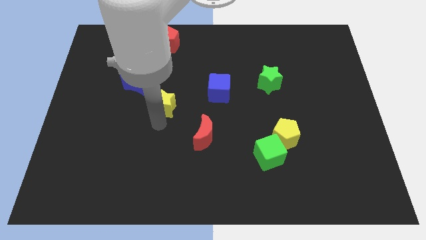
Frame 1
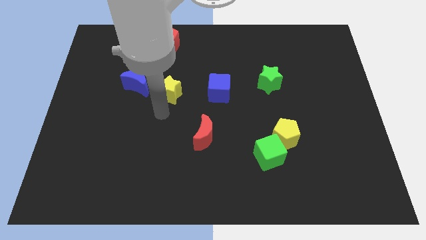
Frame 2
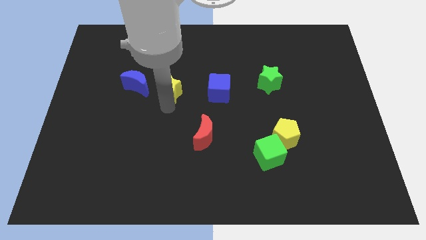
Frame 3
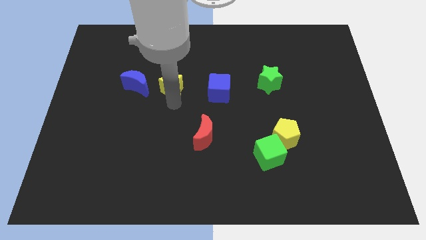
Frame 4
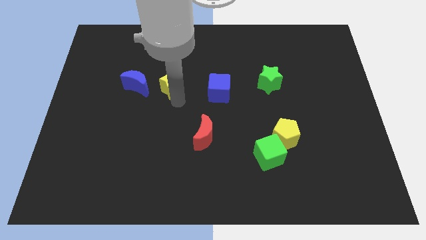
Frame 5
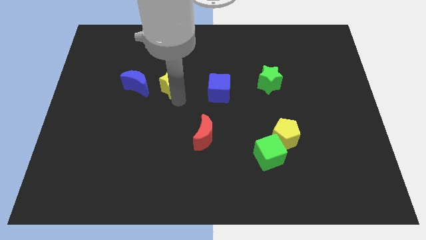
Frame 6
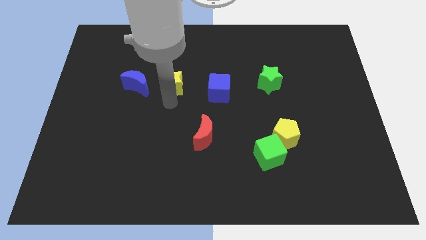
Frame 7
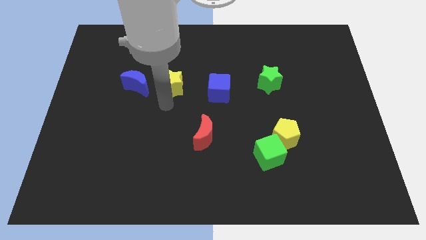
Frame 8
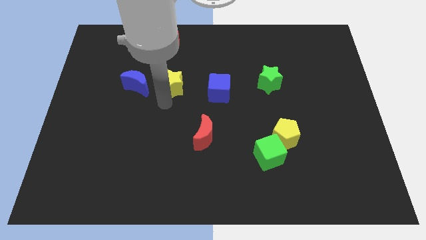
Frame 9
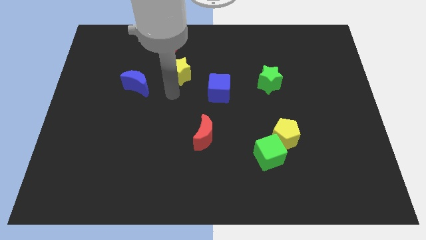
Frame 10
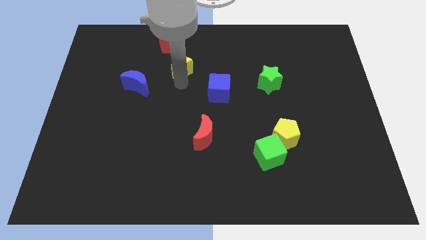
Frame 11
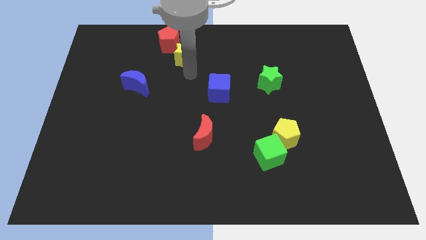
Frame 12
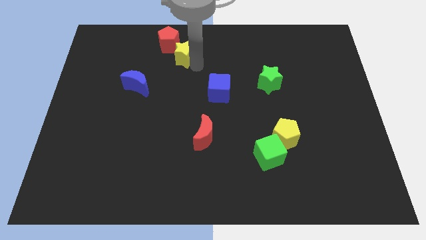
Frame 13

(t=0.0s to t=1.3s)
push the yellow star towards the red pentagon

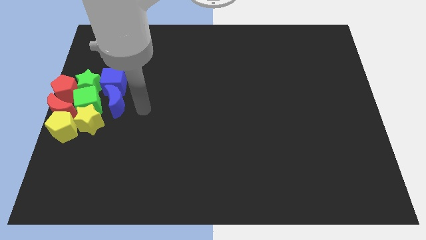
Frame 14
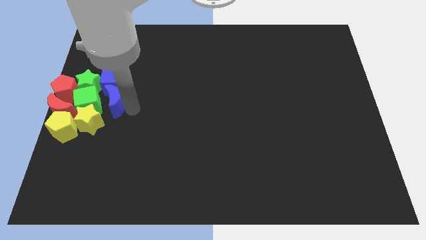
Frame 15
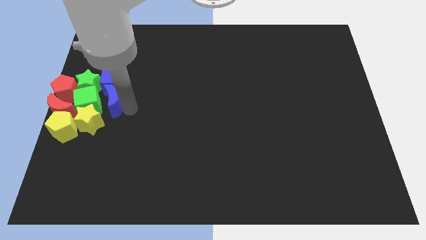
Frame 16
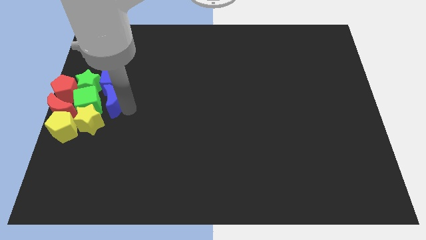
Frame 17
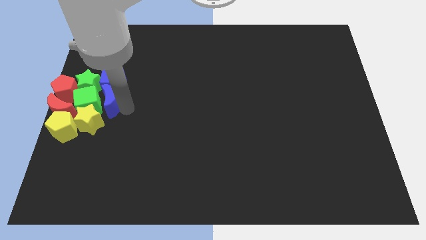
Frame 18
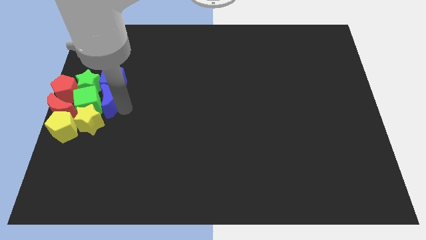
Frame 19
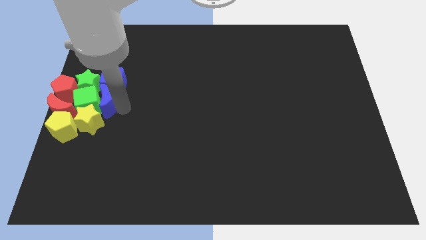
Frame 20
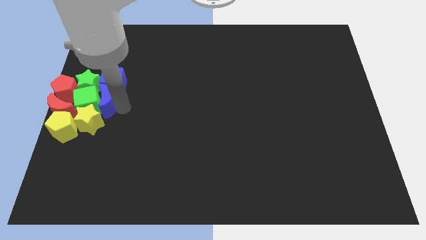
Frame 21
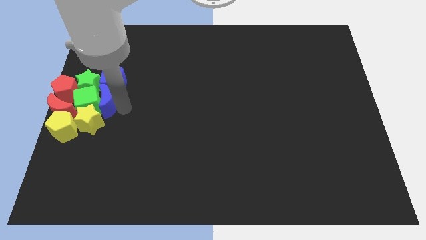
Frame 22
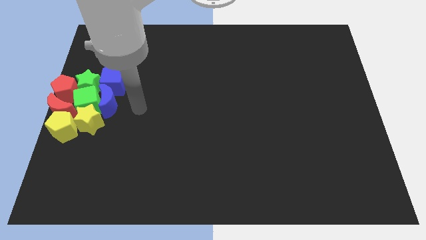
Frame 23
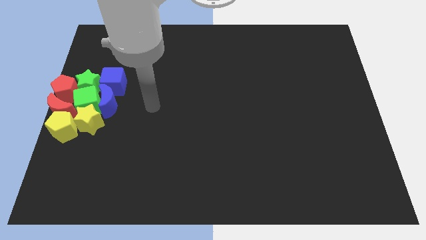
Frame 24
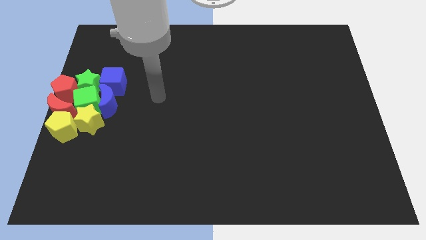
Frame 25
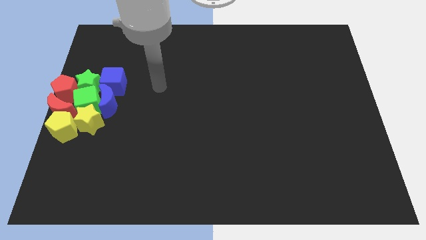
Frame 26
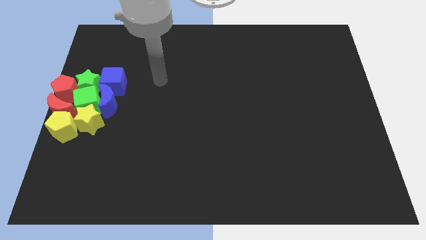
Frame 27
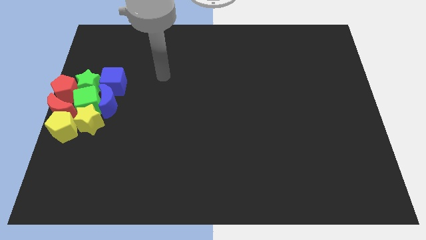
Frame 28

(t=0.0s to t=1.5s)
push blue moon into the green cube

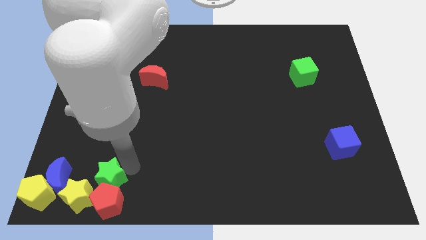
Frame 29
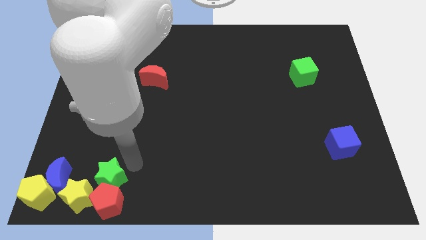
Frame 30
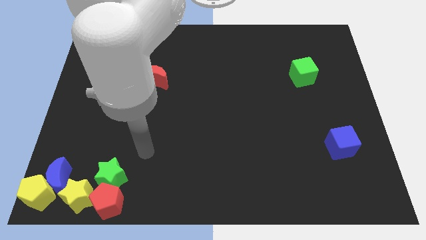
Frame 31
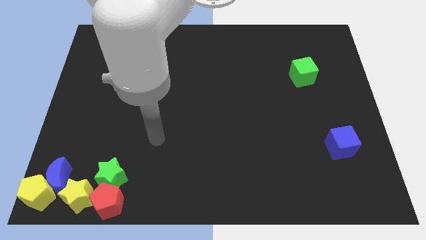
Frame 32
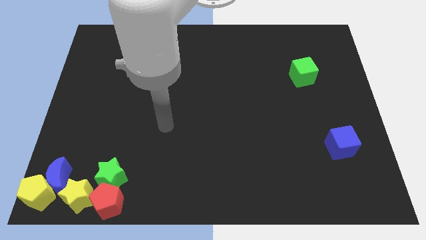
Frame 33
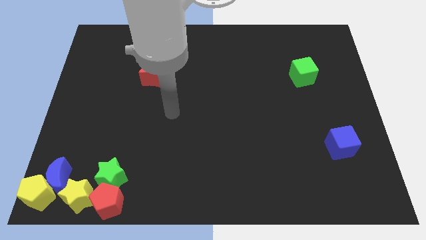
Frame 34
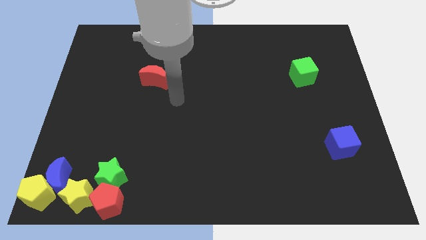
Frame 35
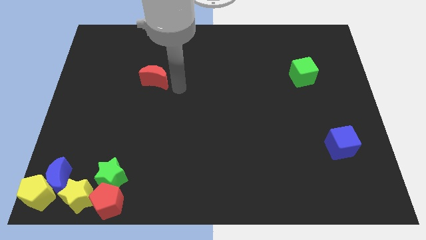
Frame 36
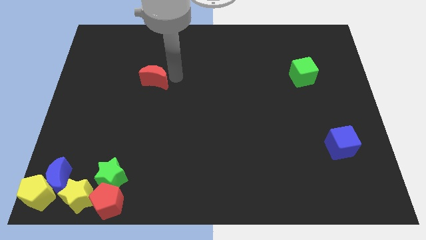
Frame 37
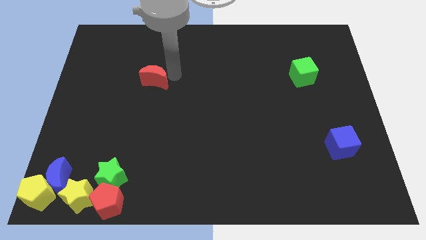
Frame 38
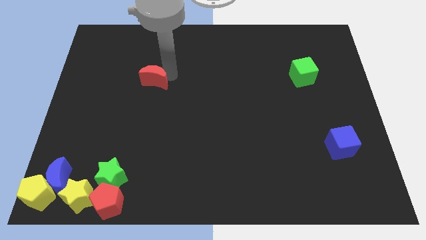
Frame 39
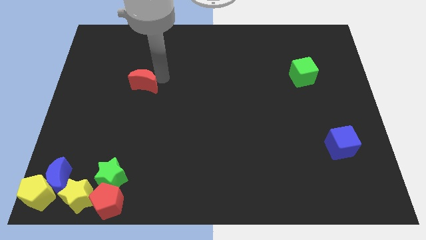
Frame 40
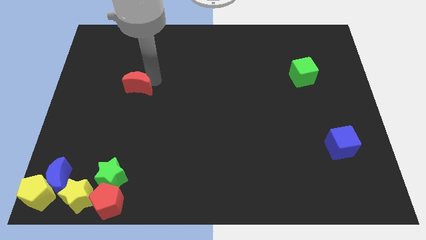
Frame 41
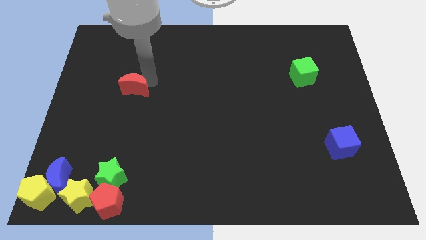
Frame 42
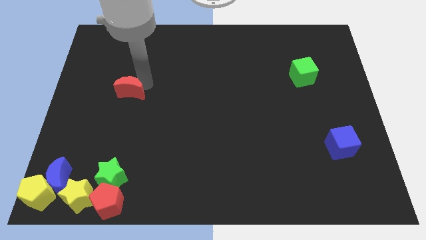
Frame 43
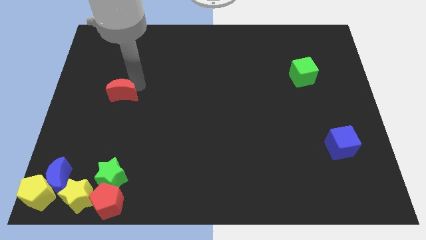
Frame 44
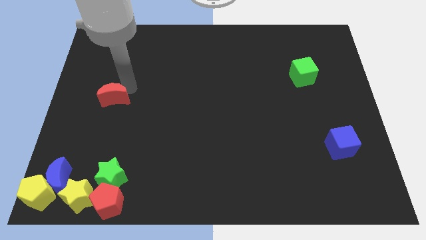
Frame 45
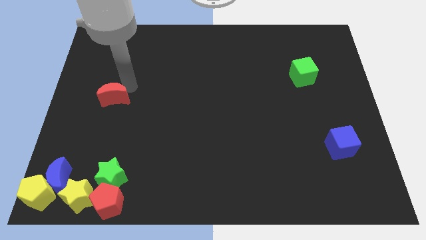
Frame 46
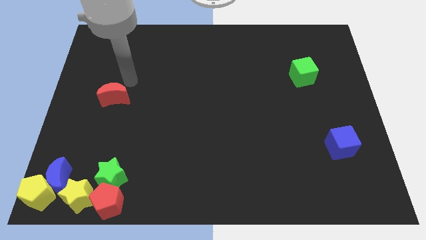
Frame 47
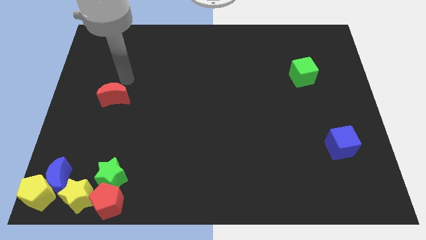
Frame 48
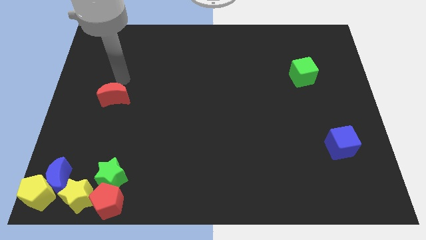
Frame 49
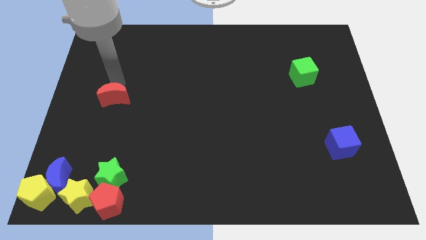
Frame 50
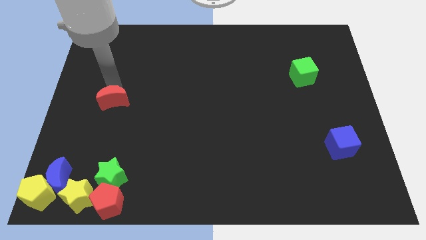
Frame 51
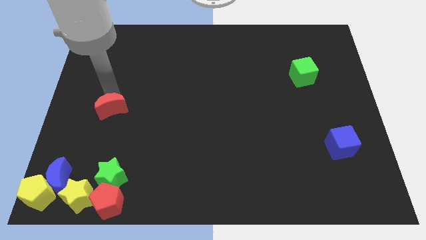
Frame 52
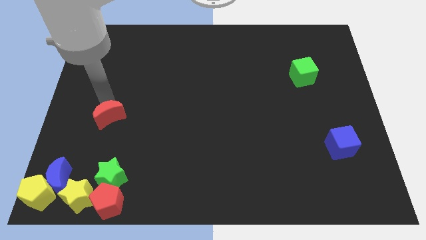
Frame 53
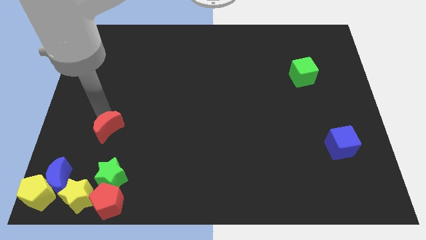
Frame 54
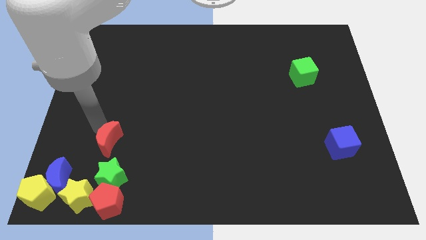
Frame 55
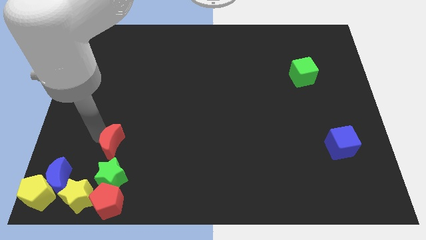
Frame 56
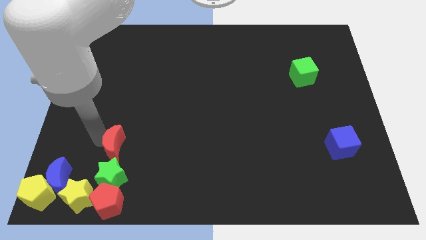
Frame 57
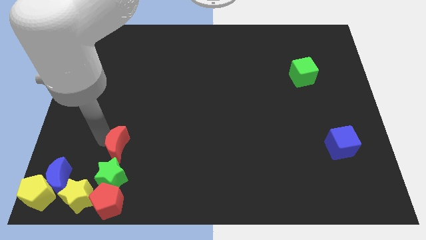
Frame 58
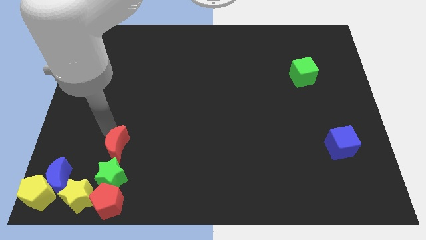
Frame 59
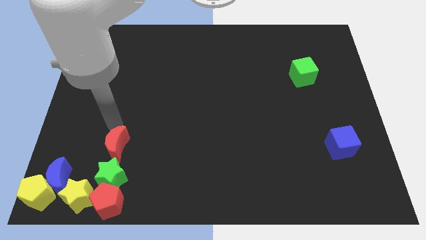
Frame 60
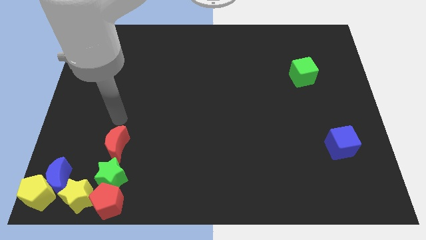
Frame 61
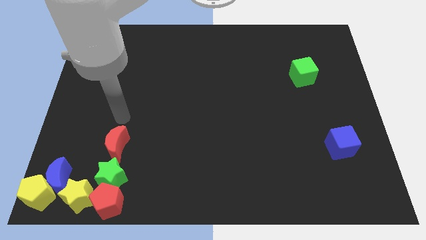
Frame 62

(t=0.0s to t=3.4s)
place the red crescent at the top of the green star

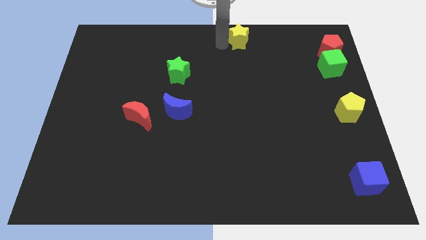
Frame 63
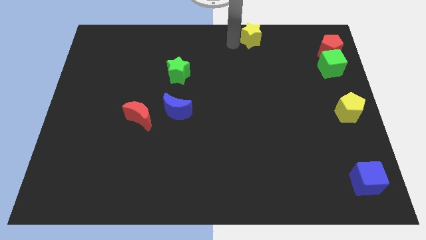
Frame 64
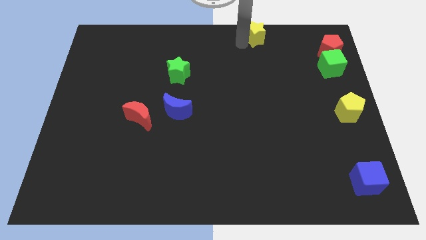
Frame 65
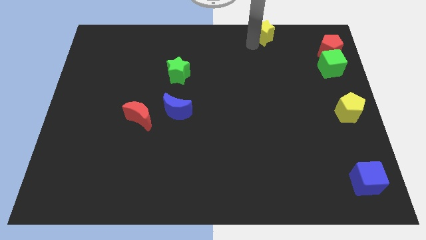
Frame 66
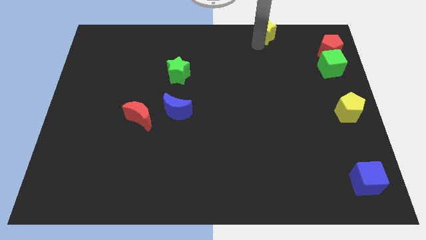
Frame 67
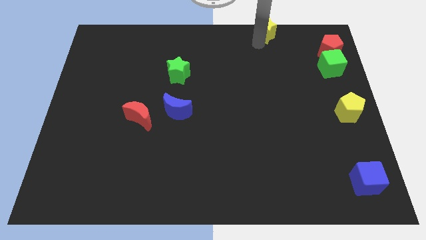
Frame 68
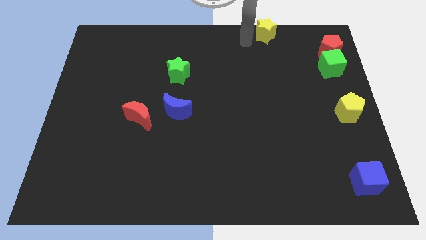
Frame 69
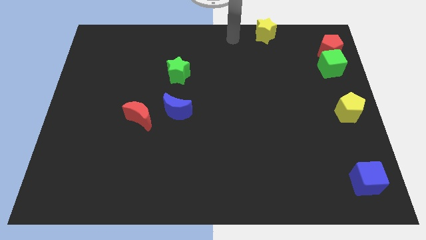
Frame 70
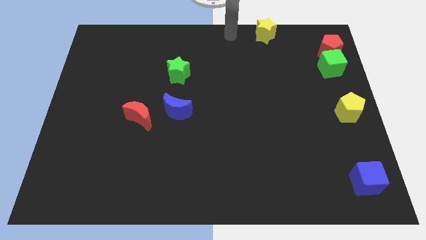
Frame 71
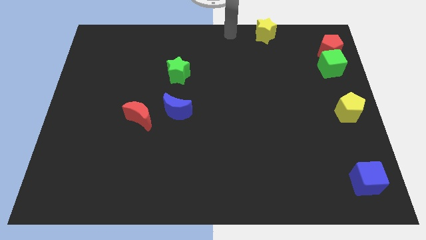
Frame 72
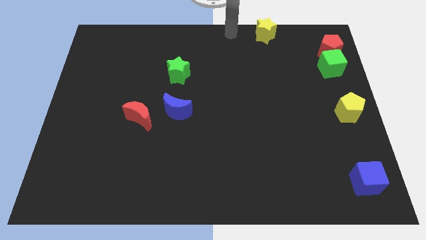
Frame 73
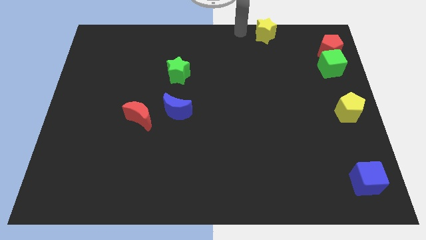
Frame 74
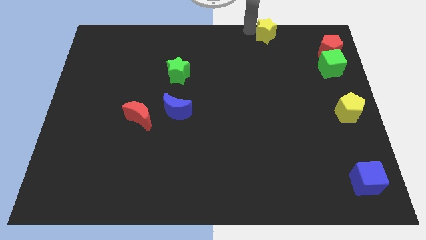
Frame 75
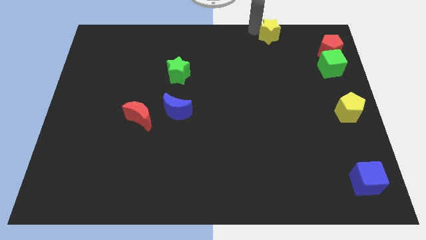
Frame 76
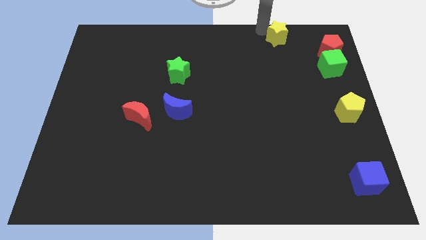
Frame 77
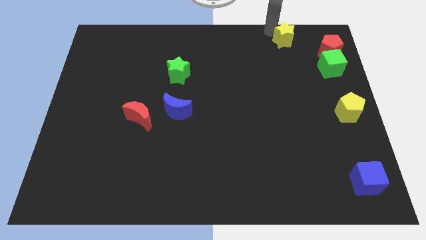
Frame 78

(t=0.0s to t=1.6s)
push the yellow star towards the right side of the board

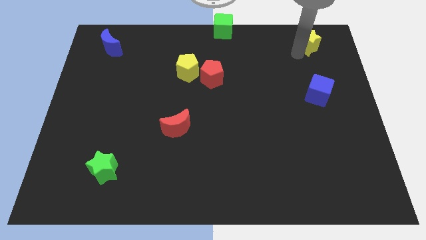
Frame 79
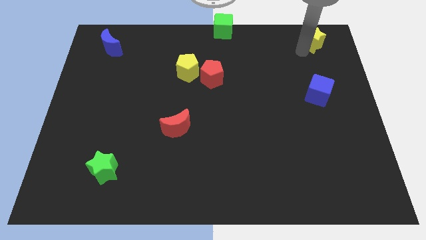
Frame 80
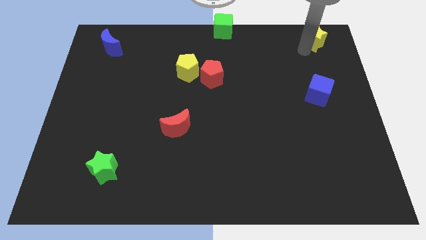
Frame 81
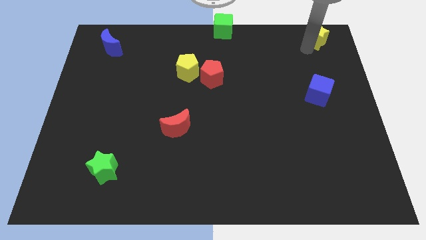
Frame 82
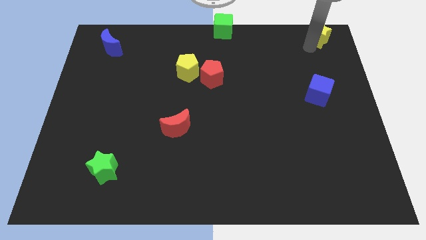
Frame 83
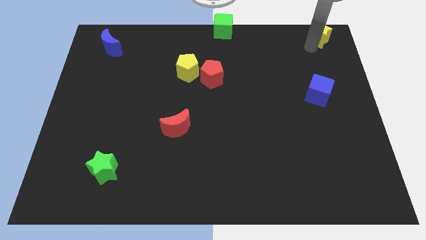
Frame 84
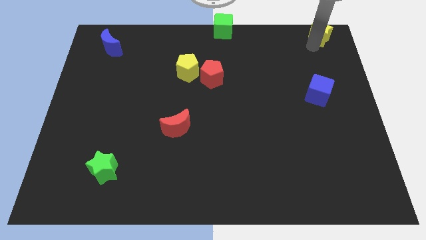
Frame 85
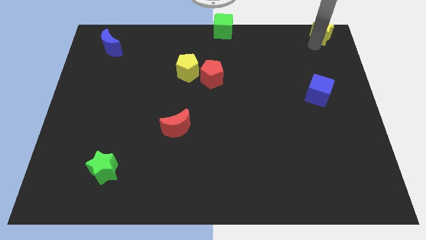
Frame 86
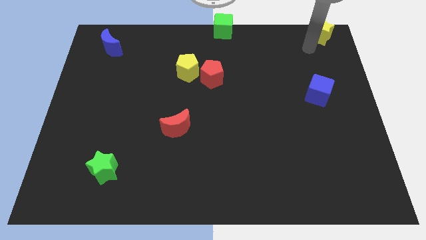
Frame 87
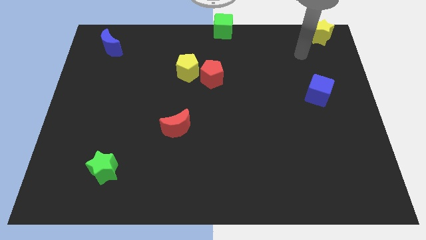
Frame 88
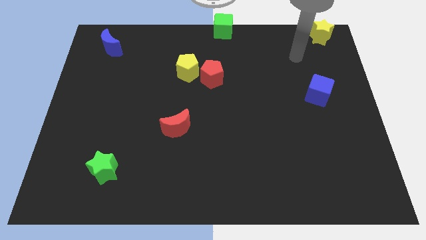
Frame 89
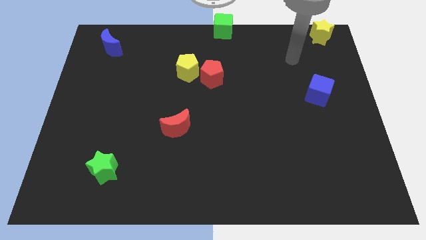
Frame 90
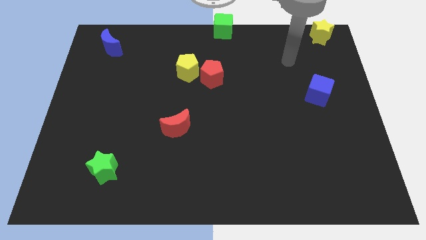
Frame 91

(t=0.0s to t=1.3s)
move the yellow star to the top right corner of the board
